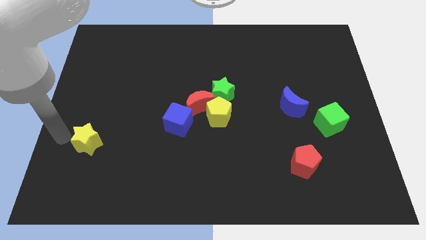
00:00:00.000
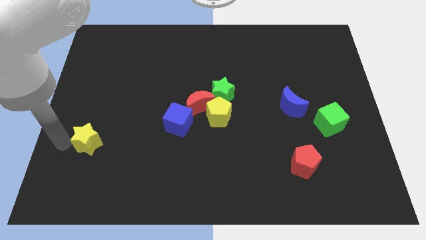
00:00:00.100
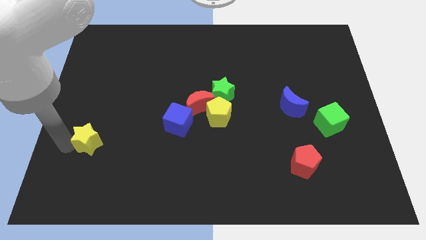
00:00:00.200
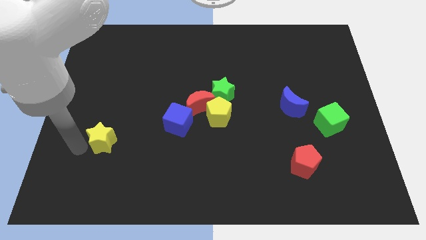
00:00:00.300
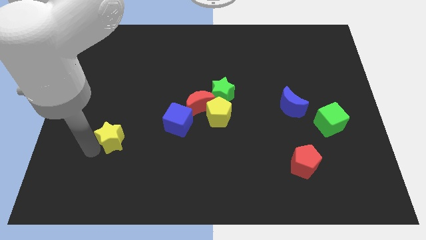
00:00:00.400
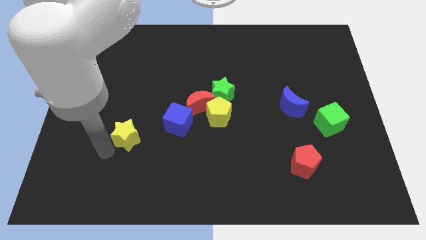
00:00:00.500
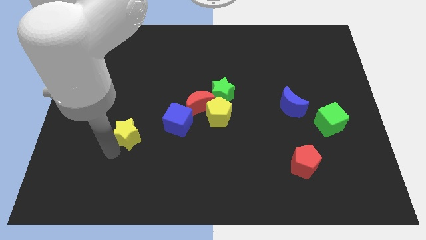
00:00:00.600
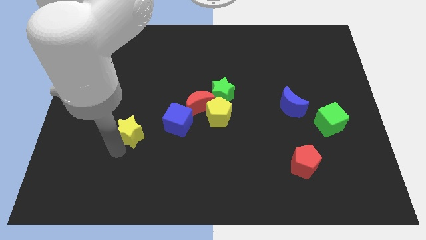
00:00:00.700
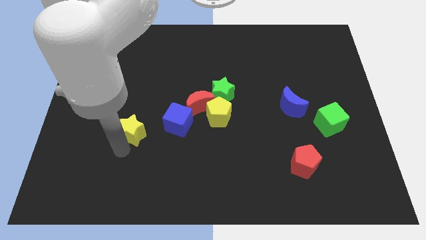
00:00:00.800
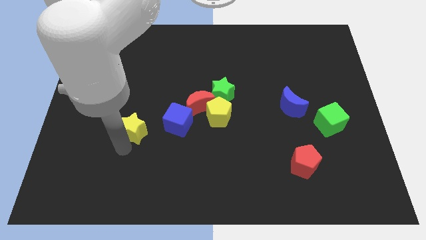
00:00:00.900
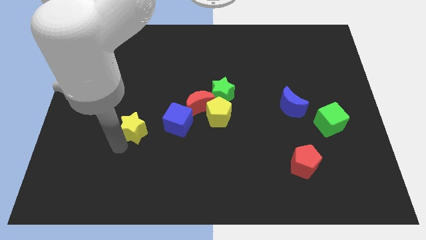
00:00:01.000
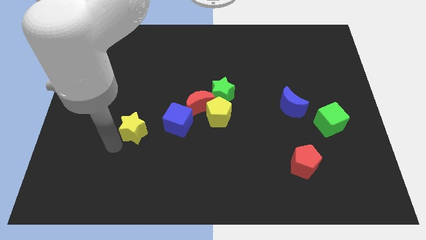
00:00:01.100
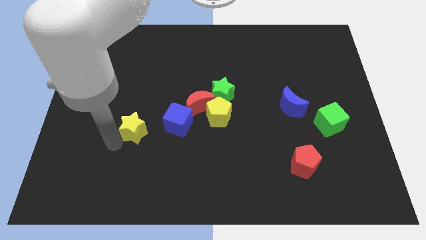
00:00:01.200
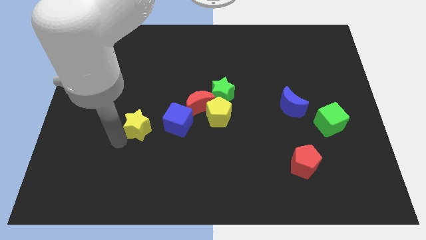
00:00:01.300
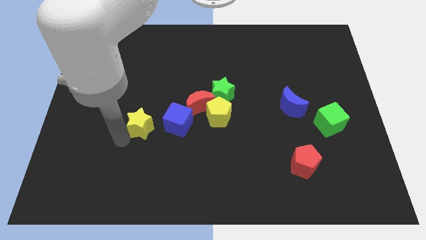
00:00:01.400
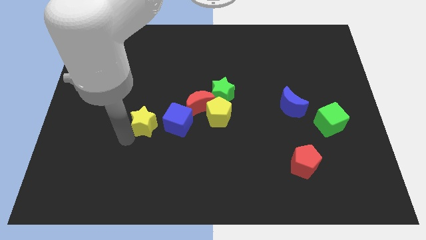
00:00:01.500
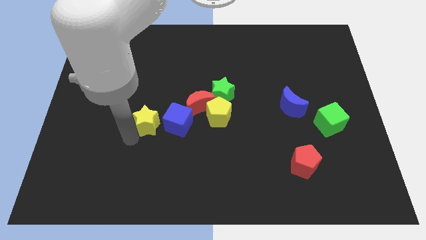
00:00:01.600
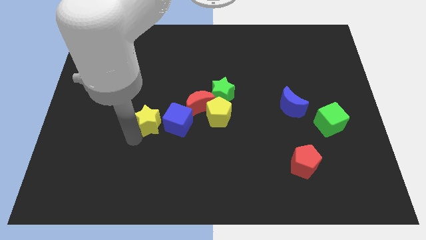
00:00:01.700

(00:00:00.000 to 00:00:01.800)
move the yellow star closer to the blue cube

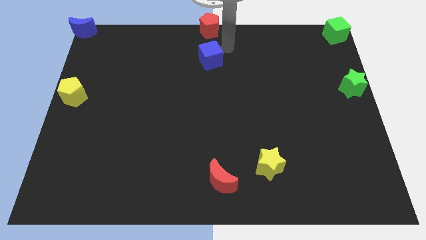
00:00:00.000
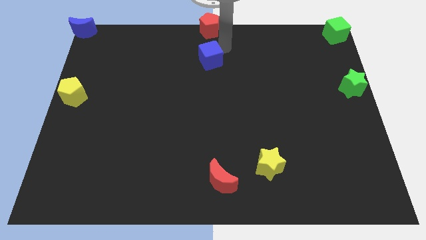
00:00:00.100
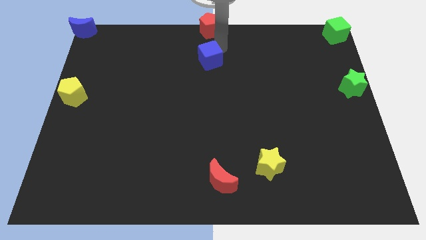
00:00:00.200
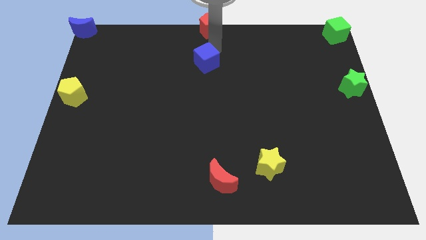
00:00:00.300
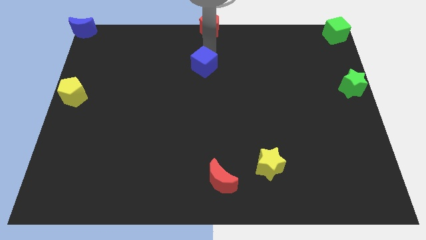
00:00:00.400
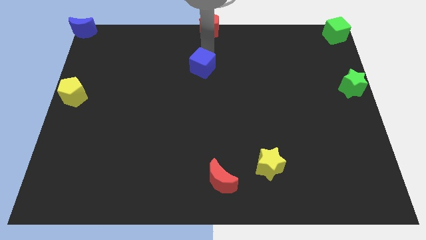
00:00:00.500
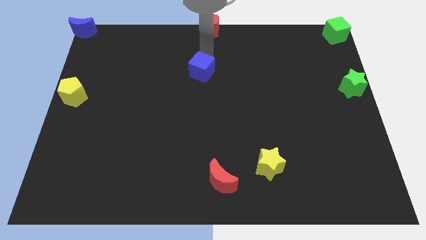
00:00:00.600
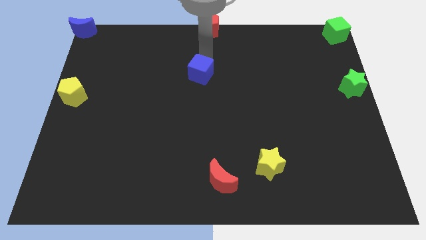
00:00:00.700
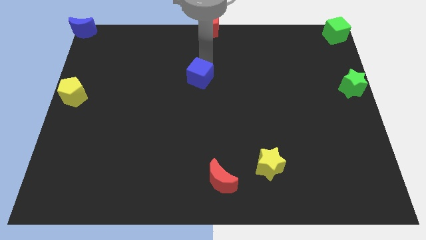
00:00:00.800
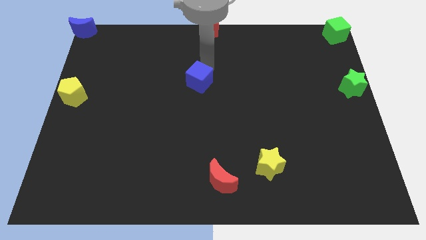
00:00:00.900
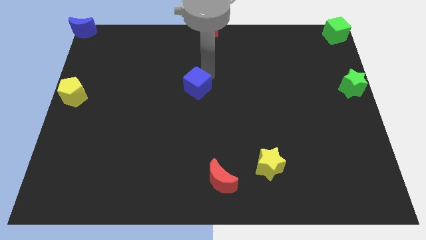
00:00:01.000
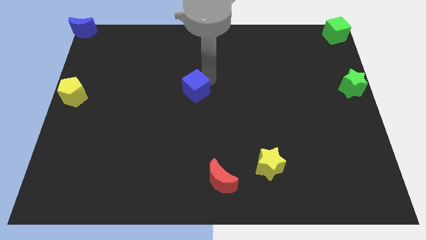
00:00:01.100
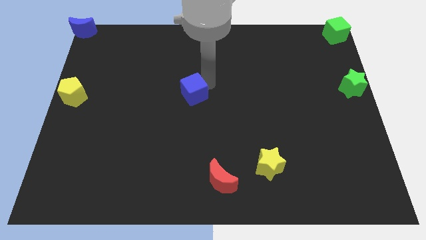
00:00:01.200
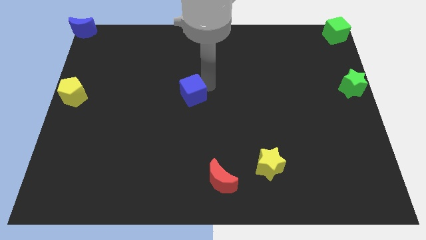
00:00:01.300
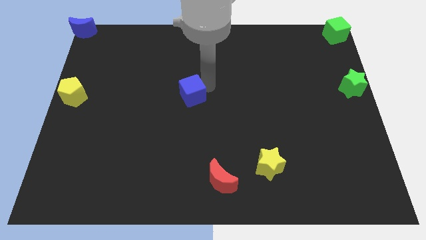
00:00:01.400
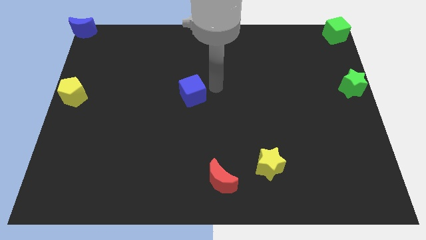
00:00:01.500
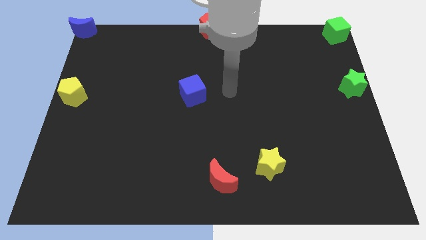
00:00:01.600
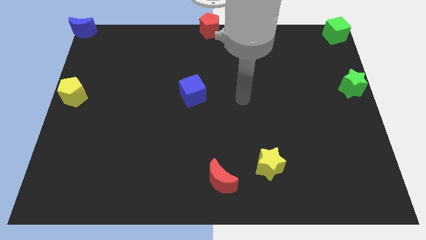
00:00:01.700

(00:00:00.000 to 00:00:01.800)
move the blue cube to the center of the board

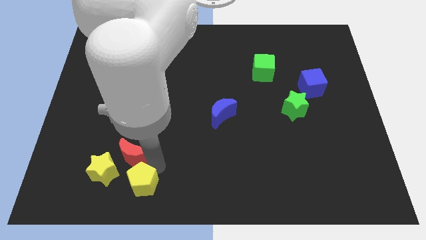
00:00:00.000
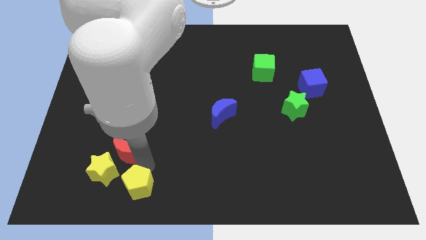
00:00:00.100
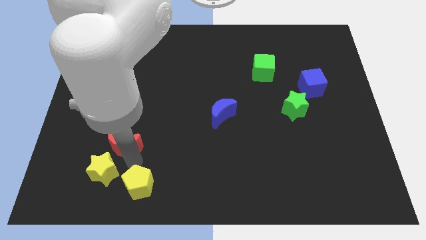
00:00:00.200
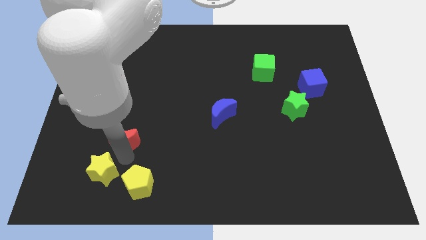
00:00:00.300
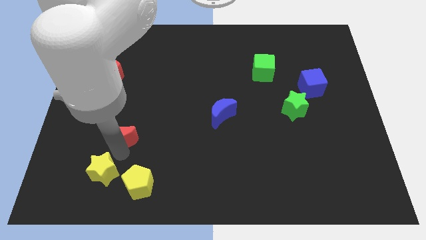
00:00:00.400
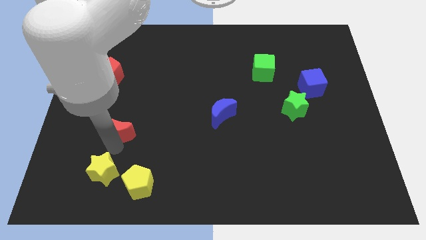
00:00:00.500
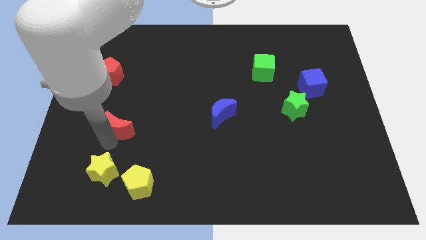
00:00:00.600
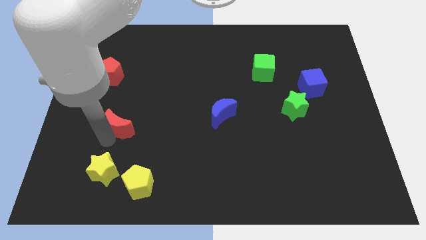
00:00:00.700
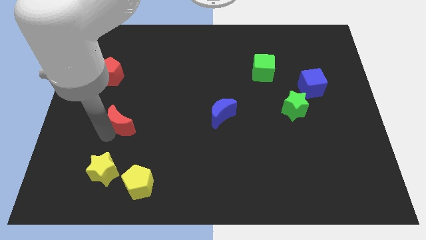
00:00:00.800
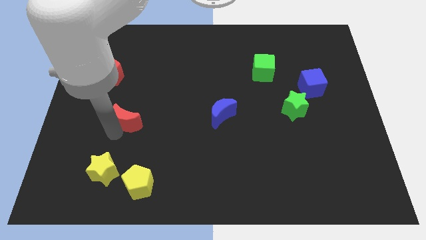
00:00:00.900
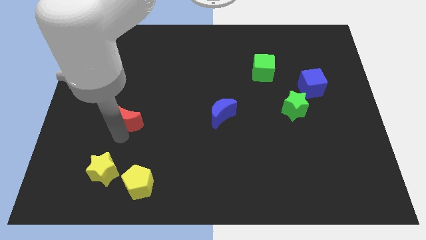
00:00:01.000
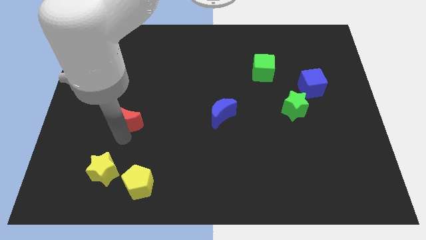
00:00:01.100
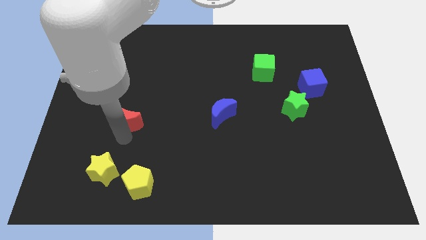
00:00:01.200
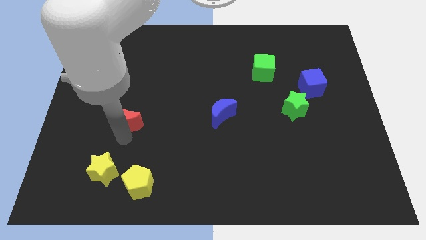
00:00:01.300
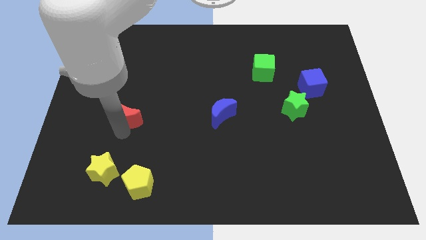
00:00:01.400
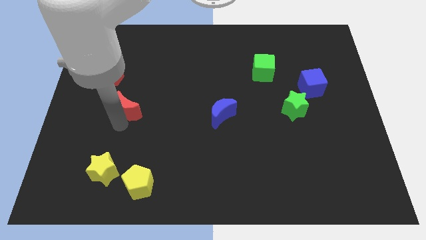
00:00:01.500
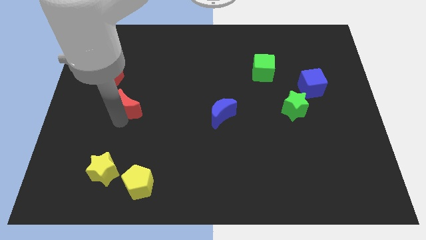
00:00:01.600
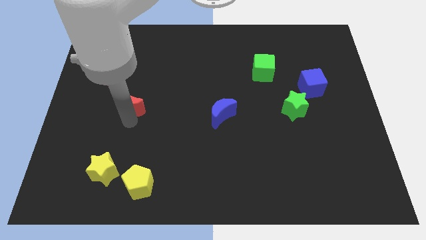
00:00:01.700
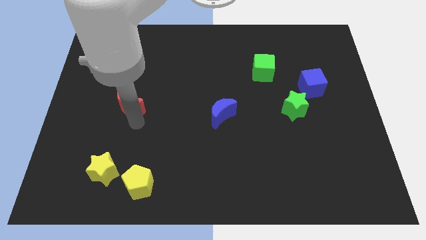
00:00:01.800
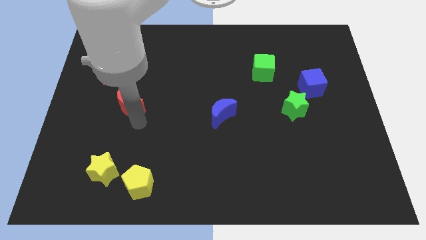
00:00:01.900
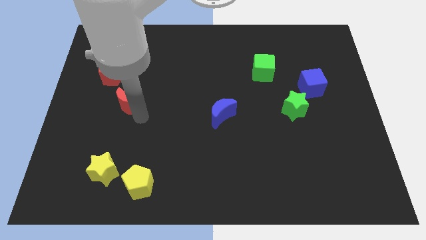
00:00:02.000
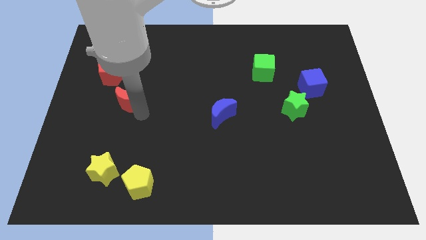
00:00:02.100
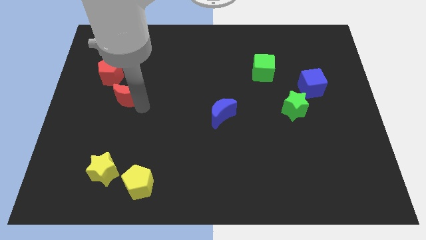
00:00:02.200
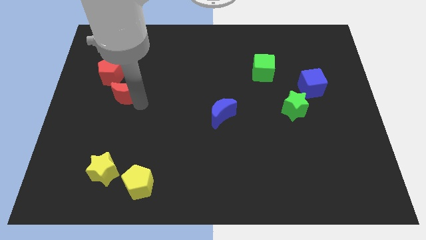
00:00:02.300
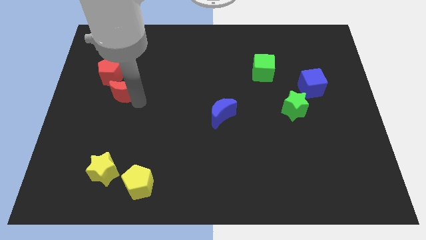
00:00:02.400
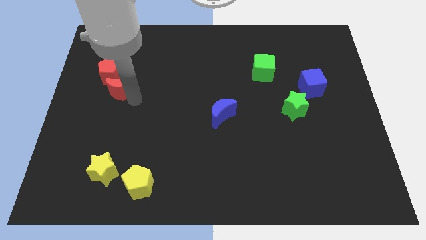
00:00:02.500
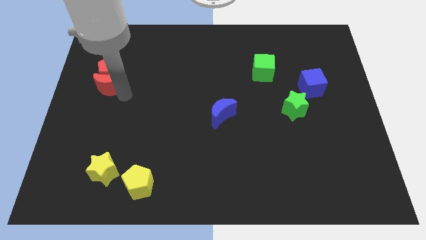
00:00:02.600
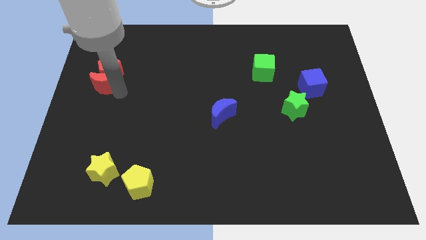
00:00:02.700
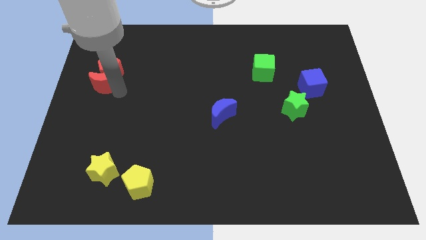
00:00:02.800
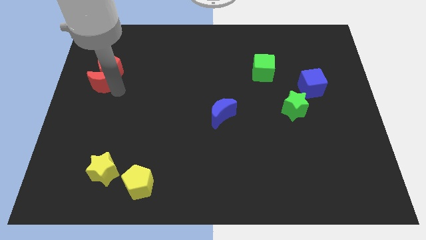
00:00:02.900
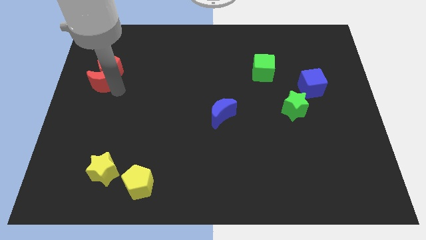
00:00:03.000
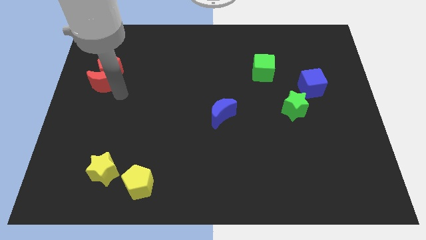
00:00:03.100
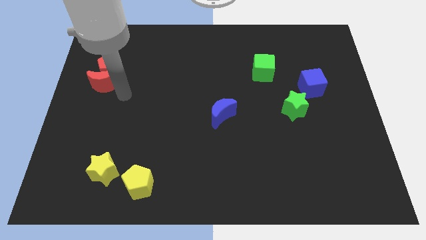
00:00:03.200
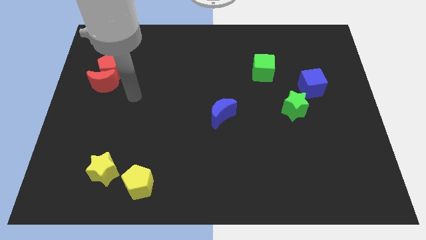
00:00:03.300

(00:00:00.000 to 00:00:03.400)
place the red crescent below the red pentagon

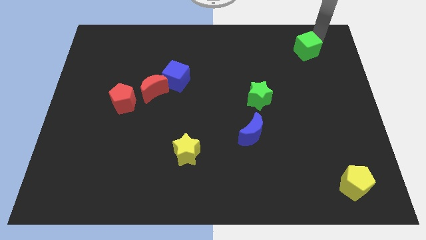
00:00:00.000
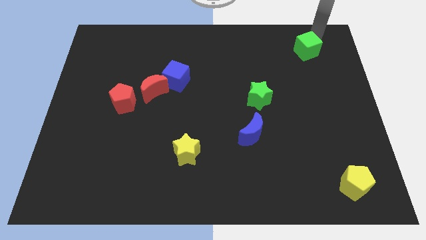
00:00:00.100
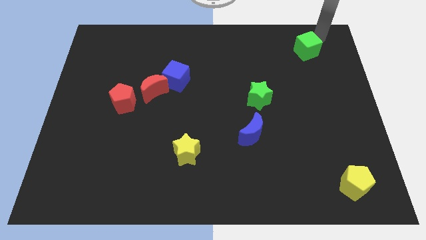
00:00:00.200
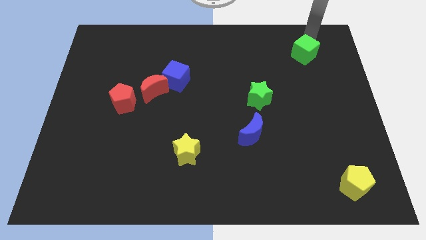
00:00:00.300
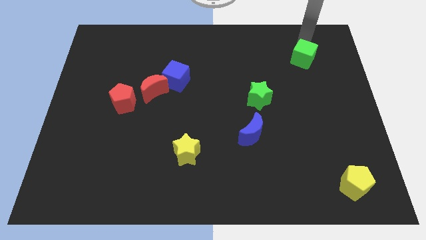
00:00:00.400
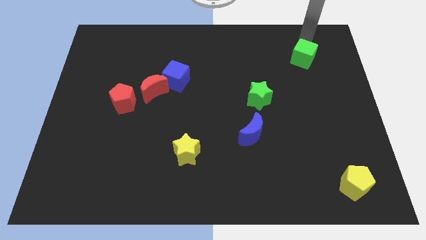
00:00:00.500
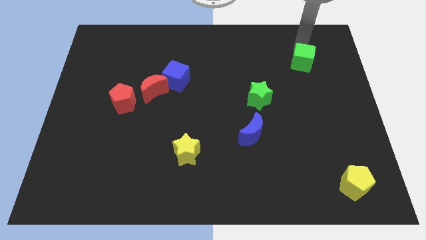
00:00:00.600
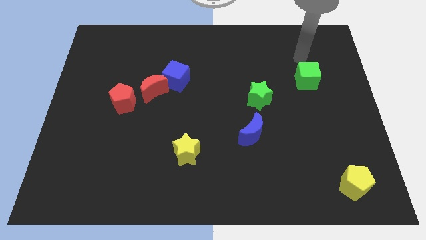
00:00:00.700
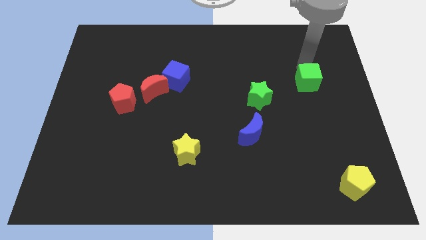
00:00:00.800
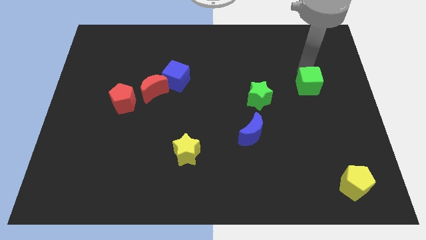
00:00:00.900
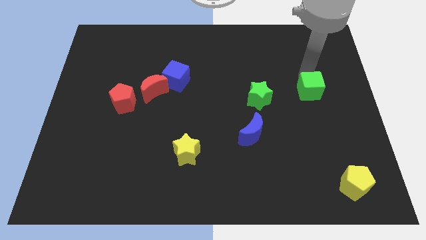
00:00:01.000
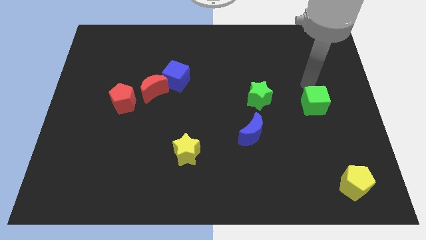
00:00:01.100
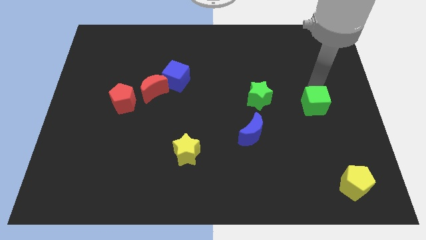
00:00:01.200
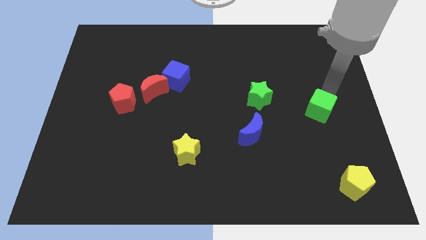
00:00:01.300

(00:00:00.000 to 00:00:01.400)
place green cube to the right of green star

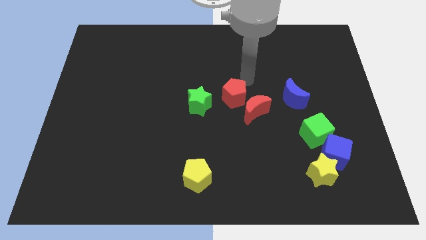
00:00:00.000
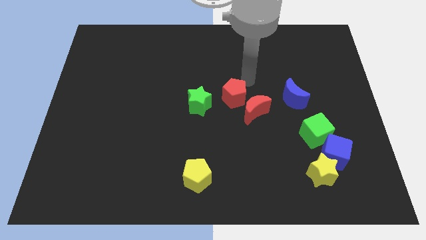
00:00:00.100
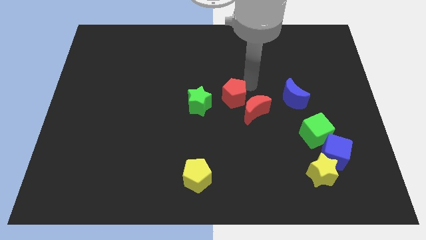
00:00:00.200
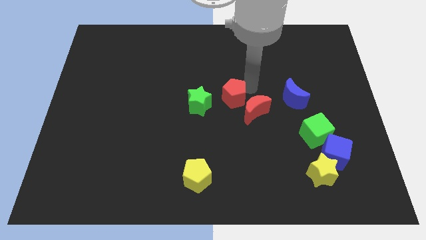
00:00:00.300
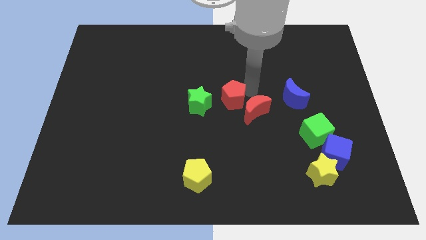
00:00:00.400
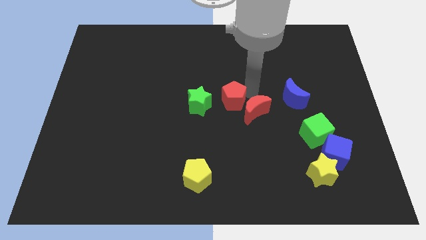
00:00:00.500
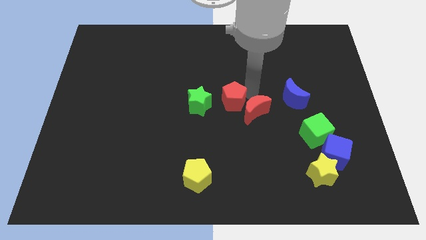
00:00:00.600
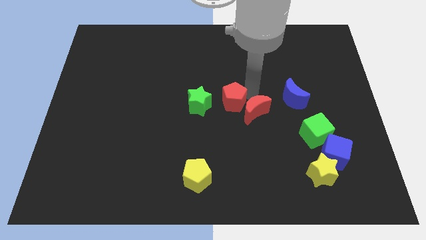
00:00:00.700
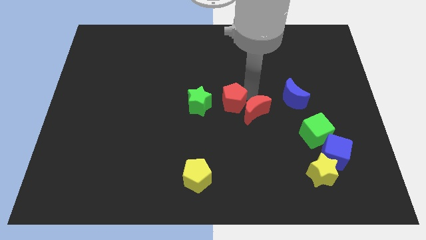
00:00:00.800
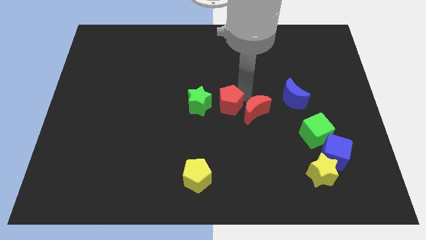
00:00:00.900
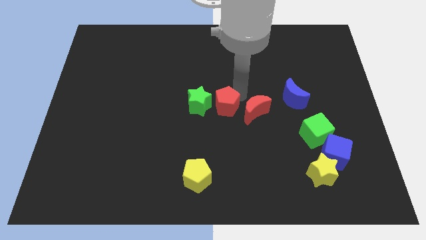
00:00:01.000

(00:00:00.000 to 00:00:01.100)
place the red pentagon in between the green star and the red crescent
